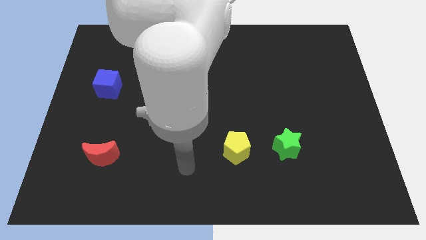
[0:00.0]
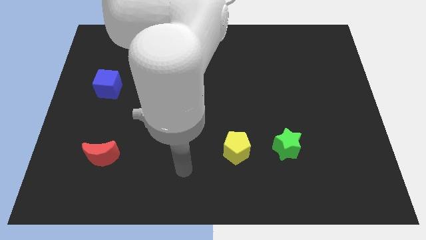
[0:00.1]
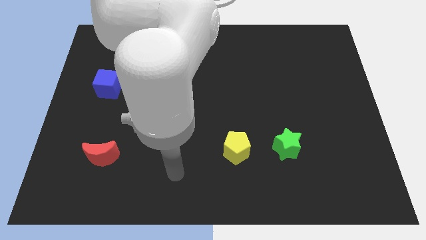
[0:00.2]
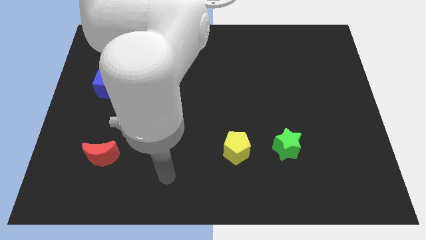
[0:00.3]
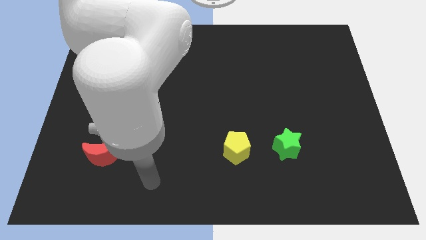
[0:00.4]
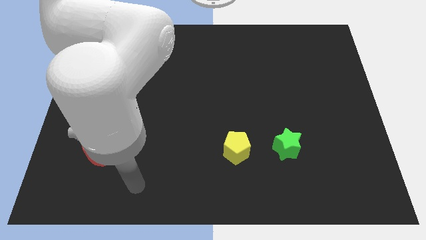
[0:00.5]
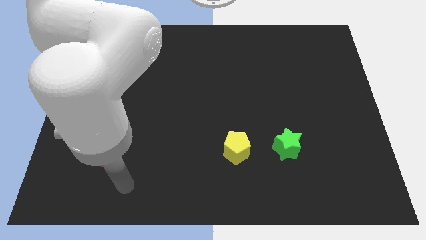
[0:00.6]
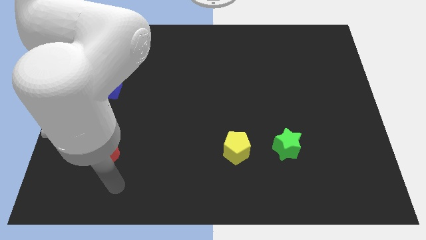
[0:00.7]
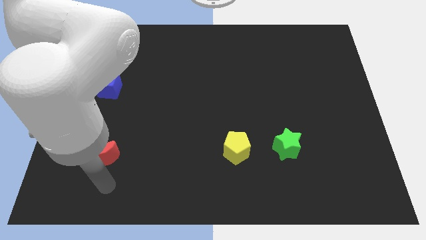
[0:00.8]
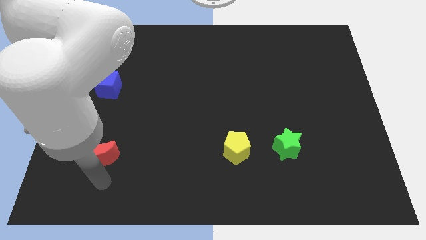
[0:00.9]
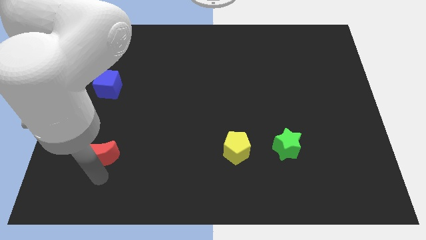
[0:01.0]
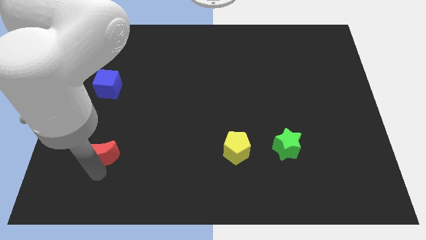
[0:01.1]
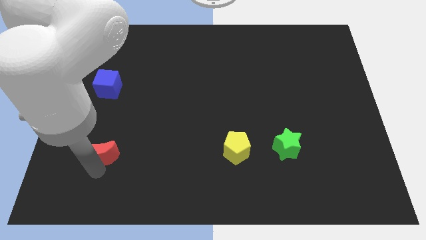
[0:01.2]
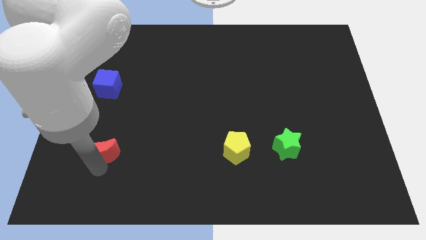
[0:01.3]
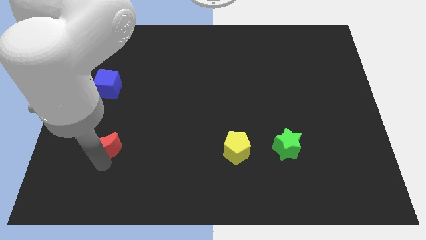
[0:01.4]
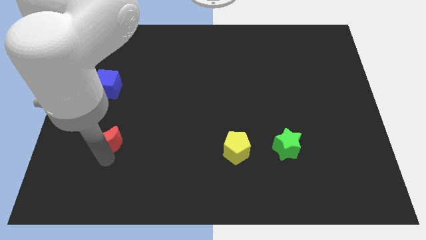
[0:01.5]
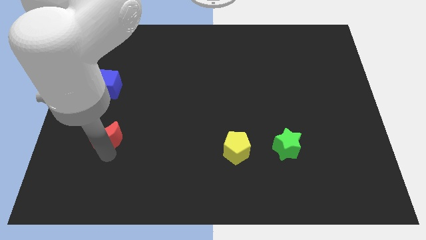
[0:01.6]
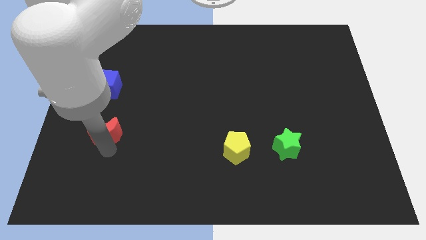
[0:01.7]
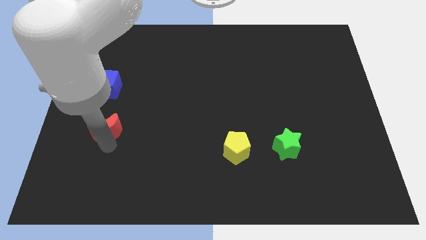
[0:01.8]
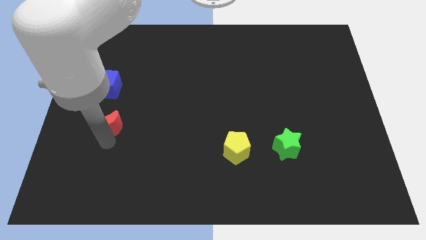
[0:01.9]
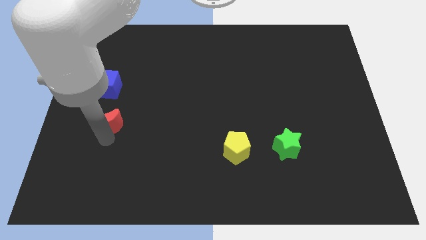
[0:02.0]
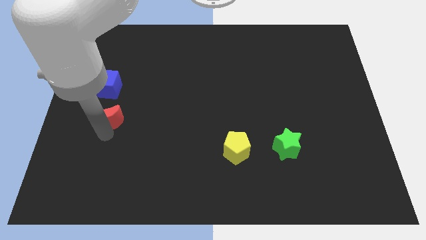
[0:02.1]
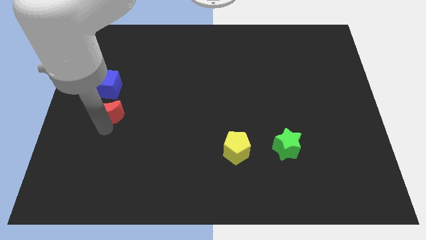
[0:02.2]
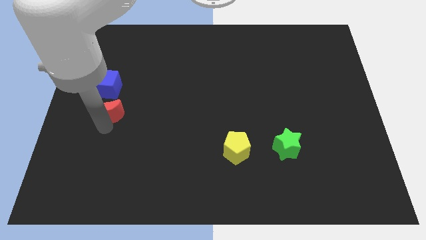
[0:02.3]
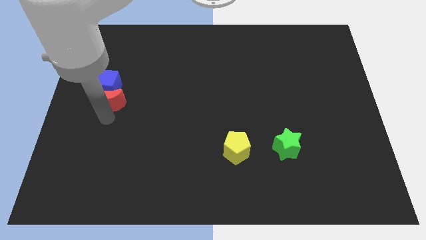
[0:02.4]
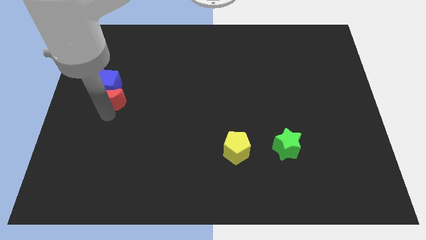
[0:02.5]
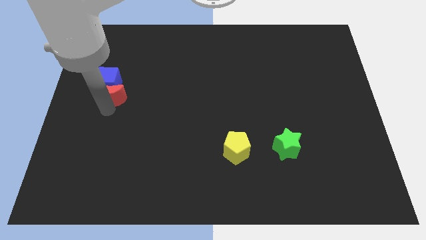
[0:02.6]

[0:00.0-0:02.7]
move the red block close to the blue block

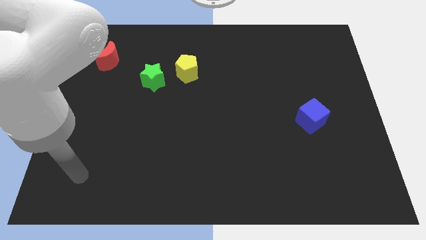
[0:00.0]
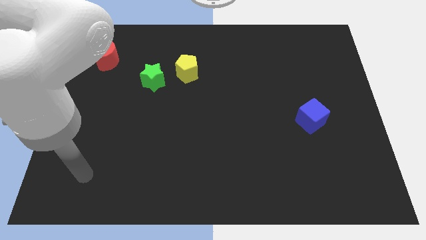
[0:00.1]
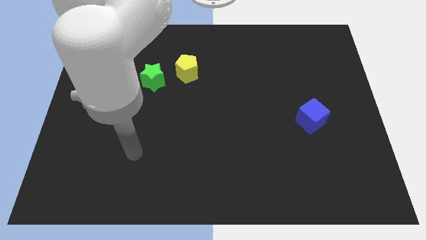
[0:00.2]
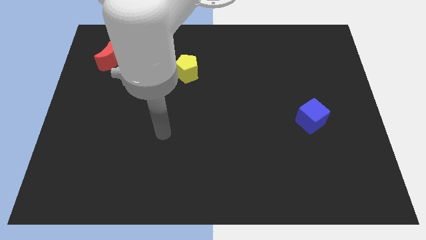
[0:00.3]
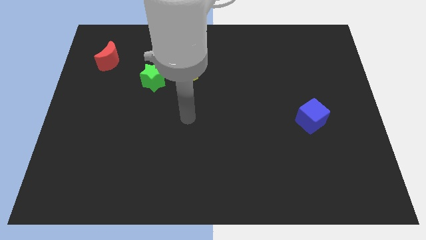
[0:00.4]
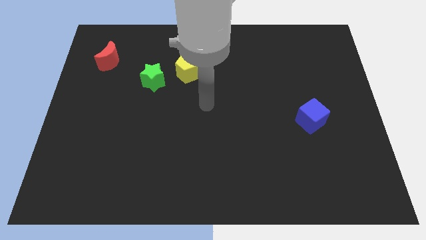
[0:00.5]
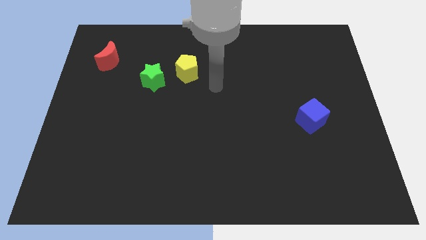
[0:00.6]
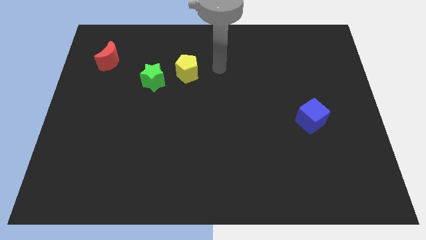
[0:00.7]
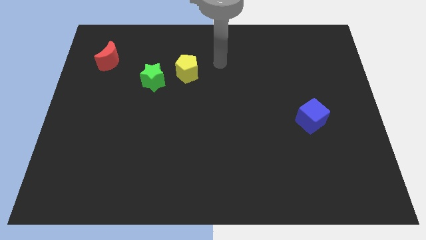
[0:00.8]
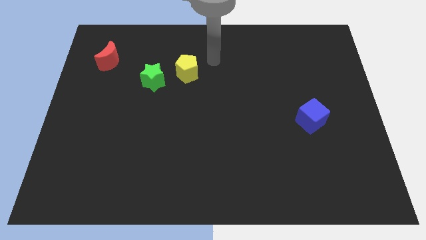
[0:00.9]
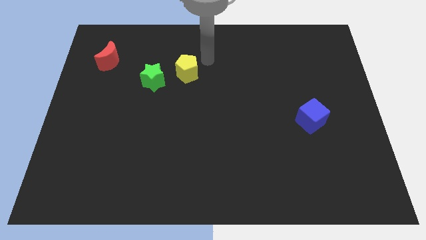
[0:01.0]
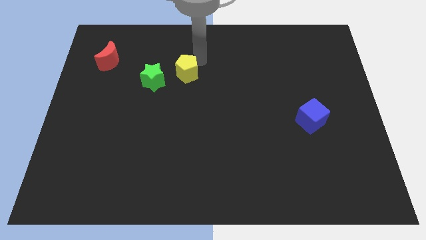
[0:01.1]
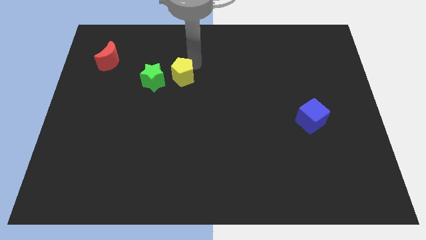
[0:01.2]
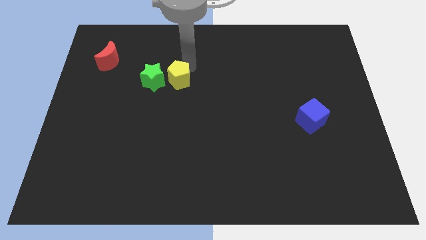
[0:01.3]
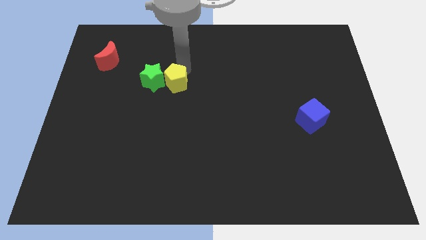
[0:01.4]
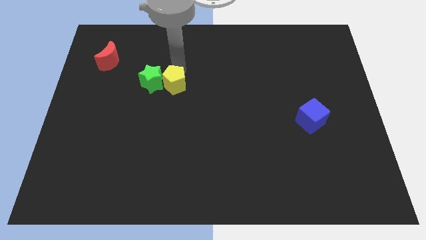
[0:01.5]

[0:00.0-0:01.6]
slide the yellow pentagon towards the green block

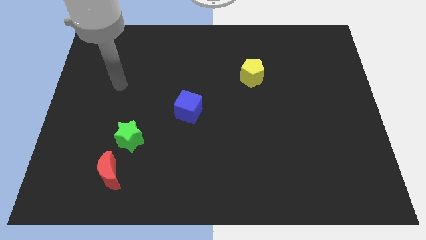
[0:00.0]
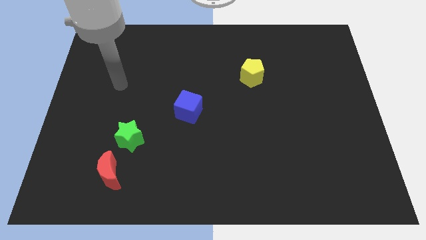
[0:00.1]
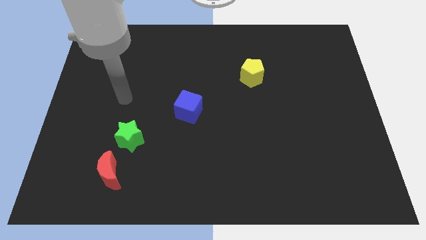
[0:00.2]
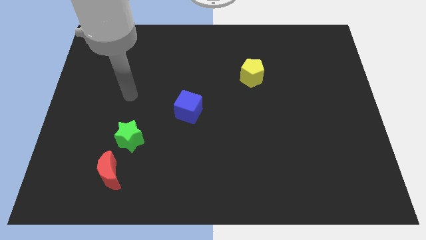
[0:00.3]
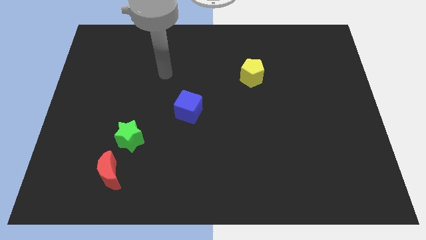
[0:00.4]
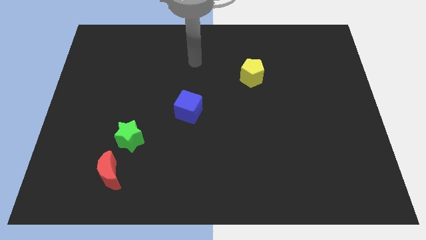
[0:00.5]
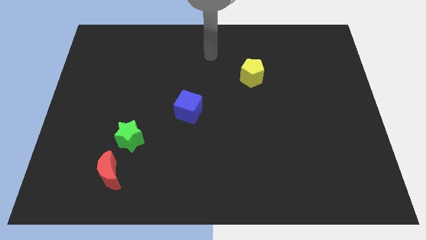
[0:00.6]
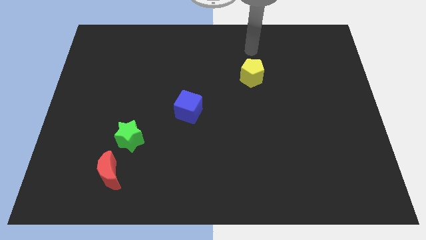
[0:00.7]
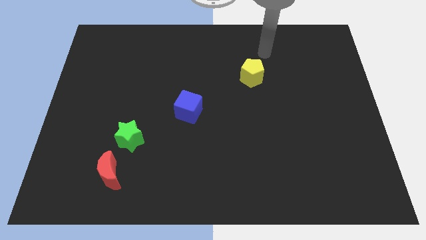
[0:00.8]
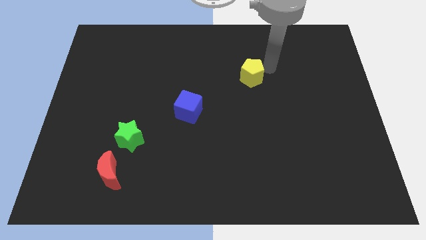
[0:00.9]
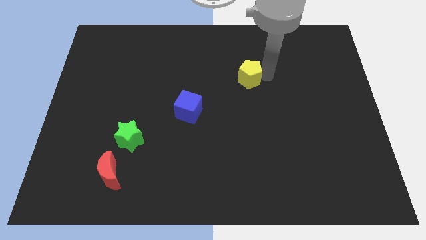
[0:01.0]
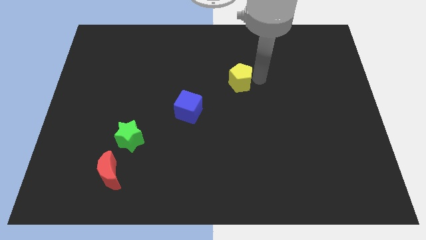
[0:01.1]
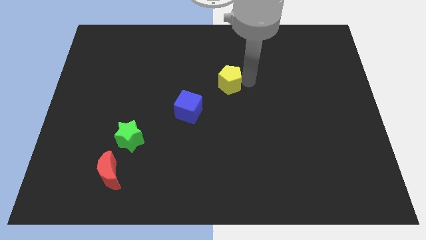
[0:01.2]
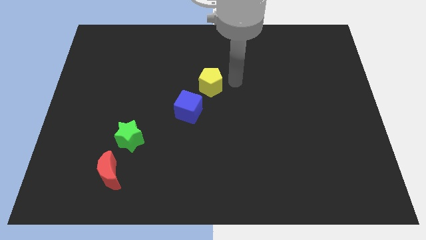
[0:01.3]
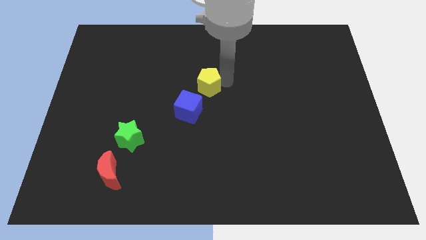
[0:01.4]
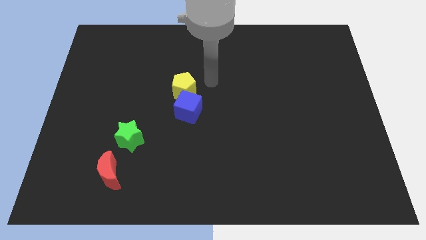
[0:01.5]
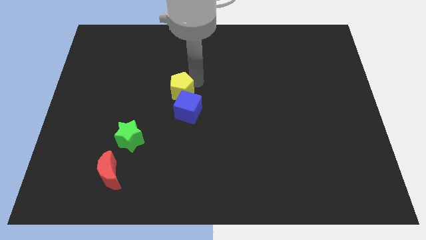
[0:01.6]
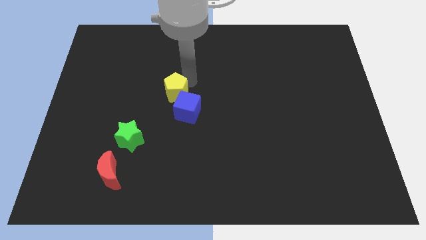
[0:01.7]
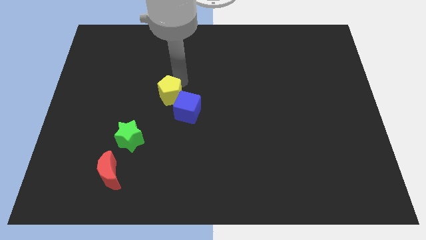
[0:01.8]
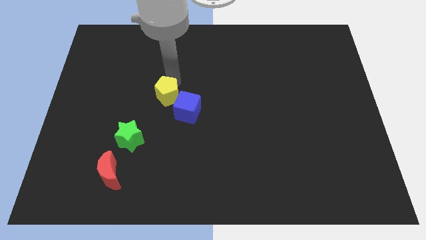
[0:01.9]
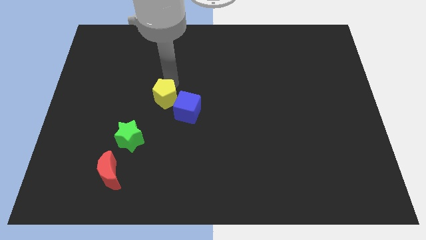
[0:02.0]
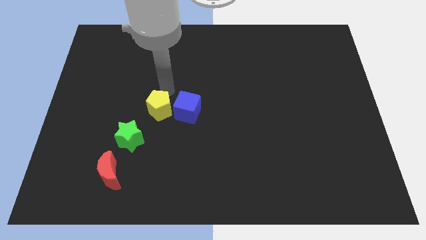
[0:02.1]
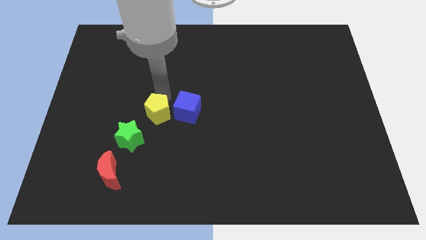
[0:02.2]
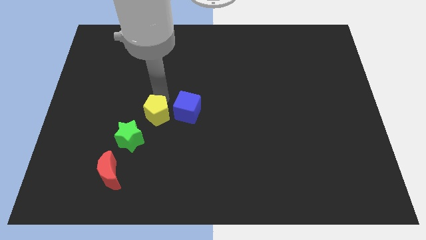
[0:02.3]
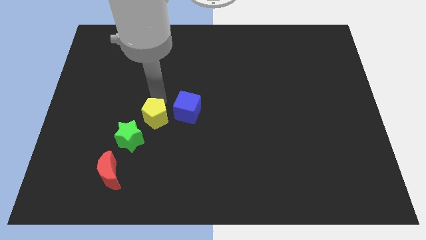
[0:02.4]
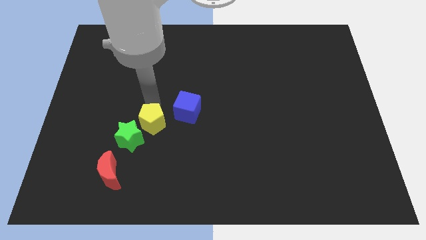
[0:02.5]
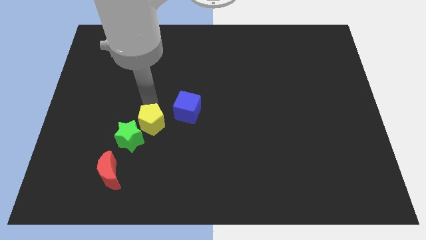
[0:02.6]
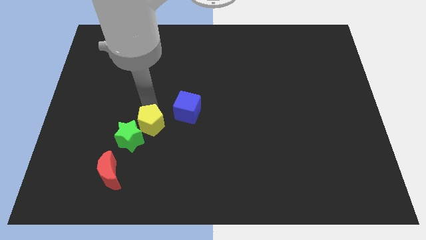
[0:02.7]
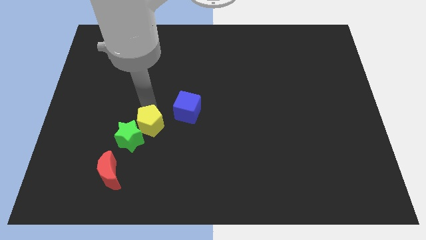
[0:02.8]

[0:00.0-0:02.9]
push the pentagon to the green star

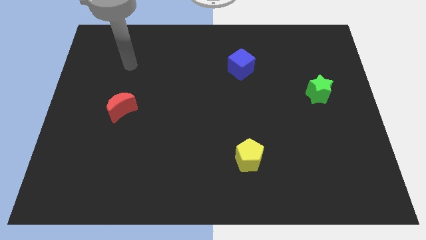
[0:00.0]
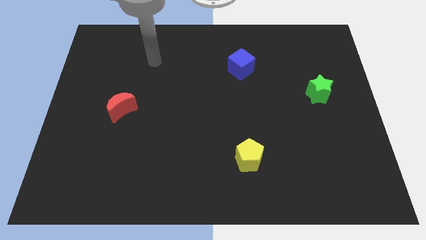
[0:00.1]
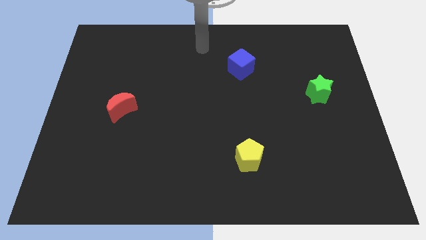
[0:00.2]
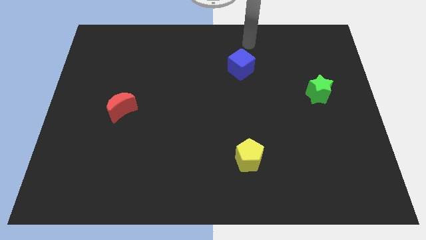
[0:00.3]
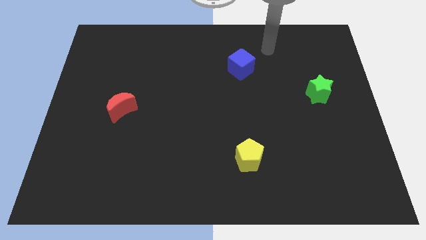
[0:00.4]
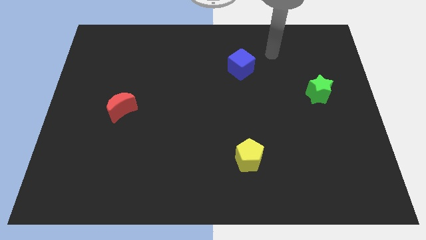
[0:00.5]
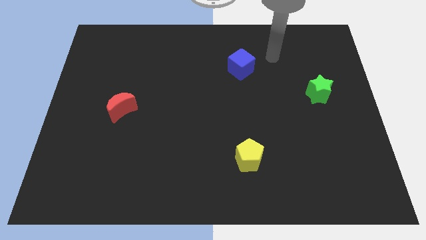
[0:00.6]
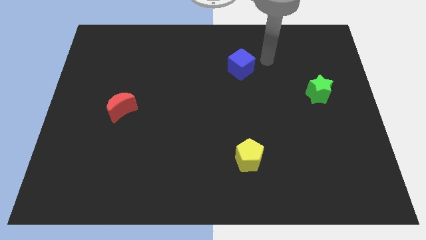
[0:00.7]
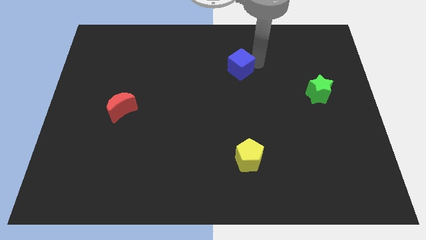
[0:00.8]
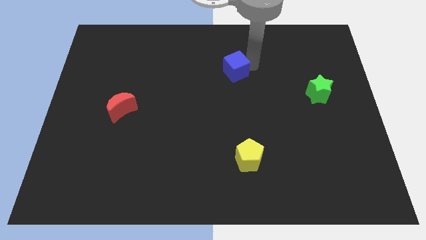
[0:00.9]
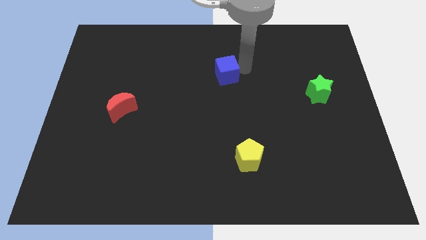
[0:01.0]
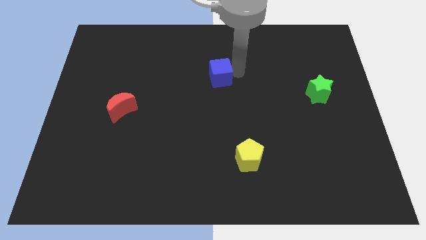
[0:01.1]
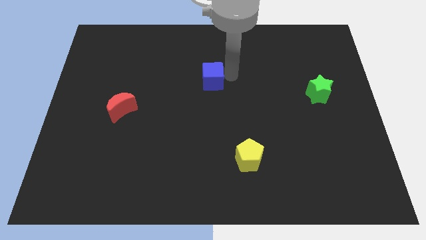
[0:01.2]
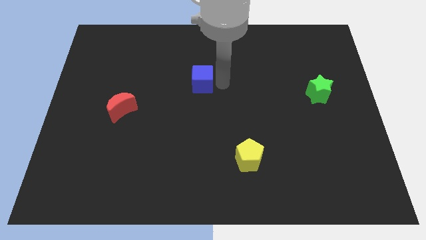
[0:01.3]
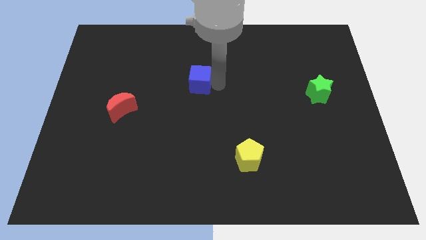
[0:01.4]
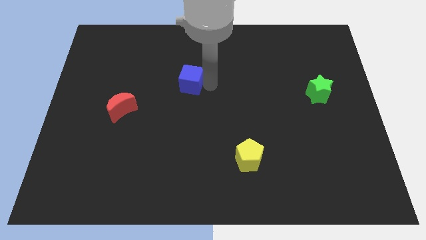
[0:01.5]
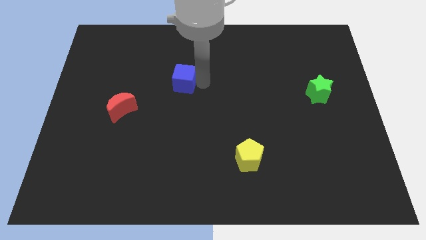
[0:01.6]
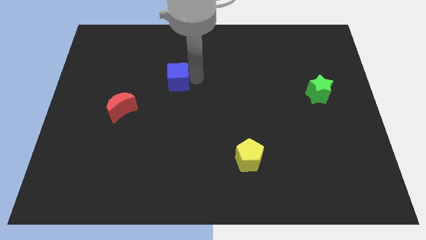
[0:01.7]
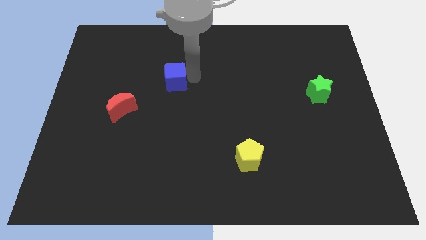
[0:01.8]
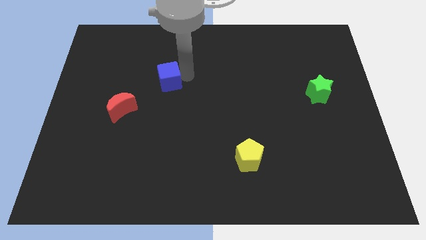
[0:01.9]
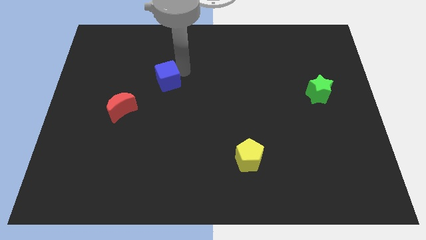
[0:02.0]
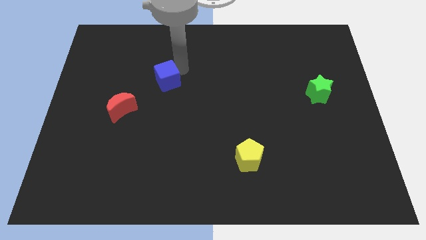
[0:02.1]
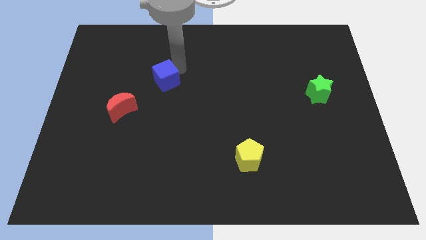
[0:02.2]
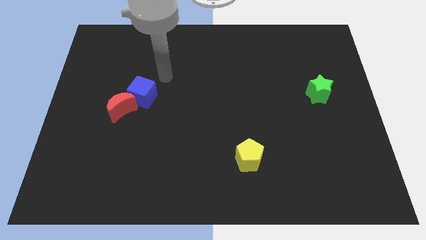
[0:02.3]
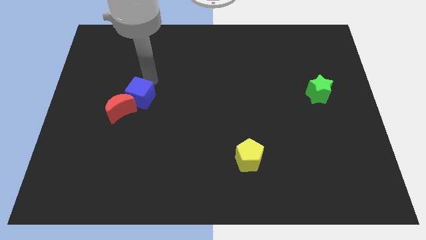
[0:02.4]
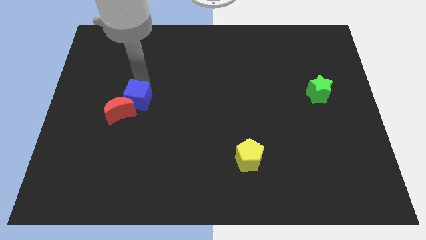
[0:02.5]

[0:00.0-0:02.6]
put the cube close to the moon
